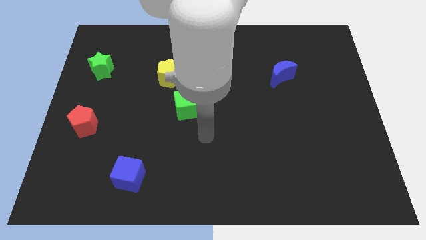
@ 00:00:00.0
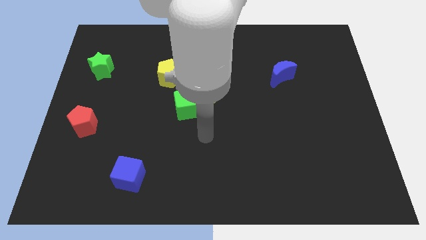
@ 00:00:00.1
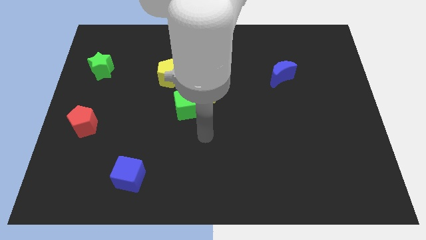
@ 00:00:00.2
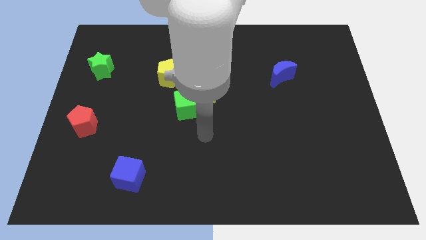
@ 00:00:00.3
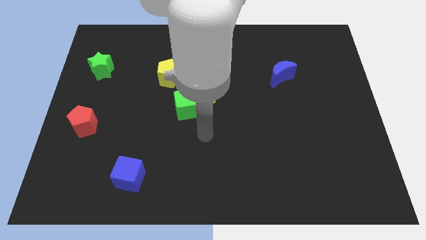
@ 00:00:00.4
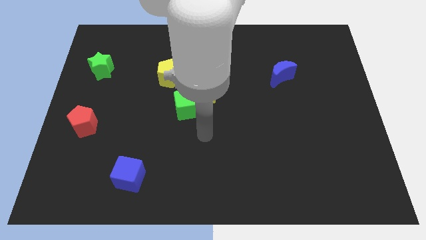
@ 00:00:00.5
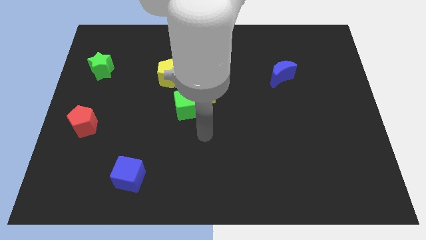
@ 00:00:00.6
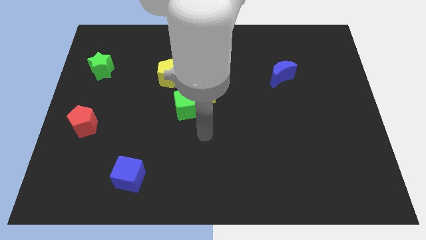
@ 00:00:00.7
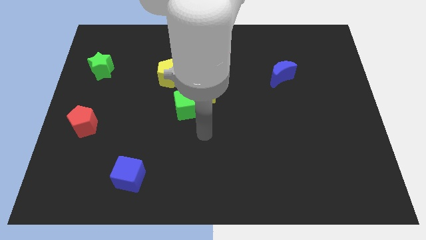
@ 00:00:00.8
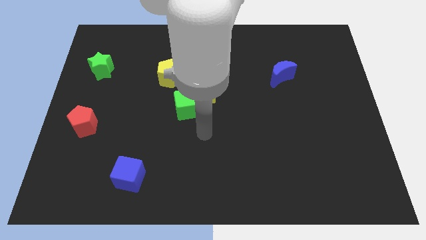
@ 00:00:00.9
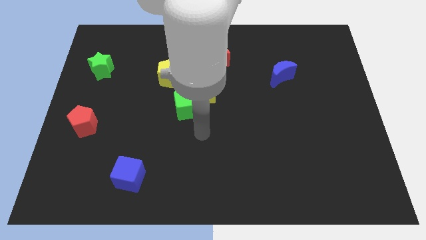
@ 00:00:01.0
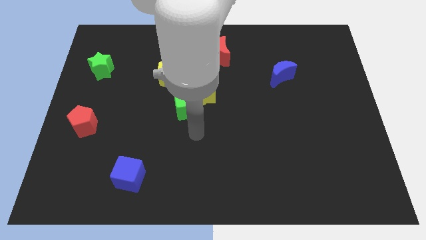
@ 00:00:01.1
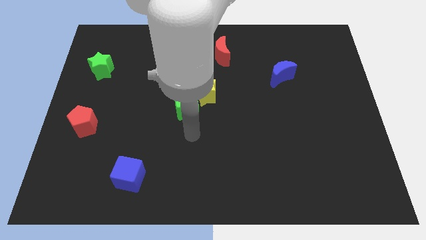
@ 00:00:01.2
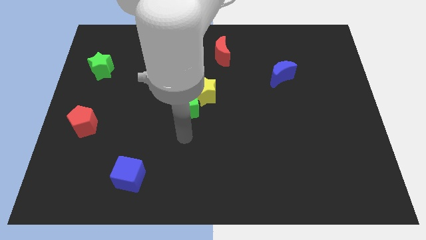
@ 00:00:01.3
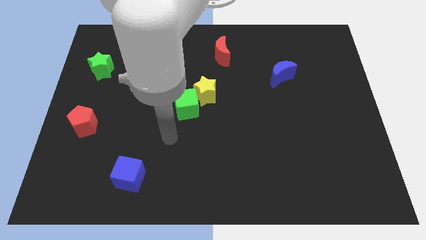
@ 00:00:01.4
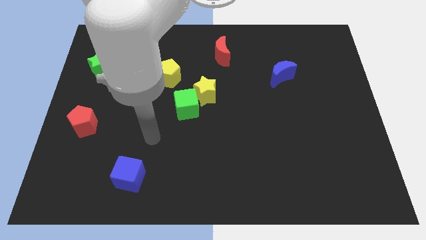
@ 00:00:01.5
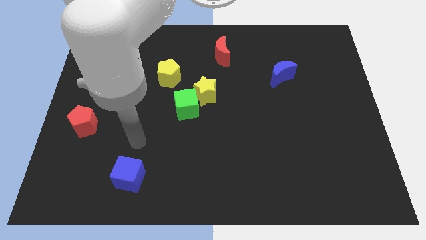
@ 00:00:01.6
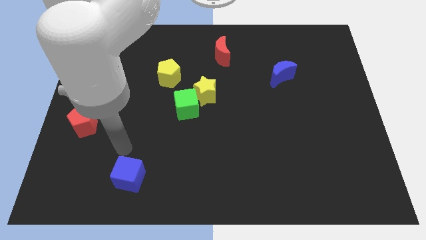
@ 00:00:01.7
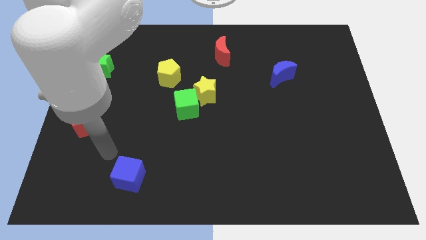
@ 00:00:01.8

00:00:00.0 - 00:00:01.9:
point your hand above the blue cube

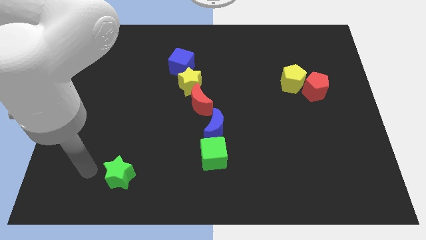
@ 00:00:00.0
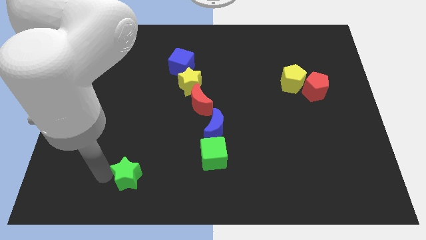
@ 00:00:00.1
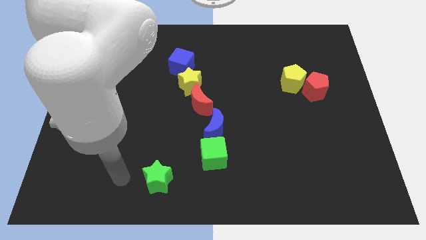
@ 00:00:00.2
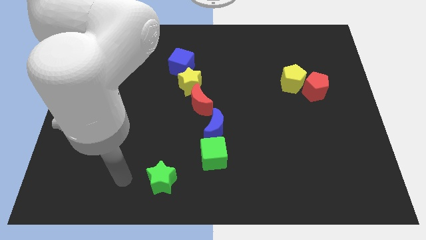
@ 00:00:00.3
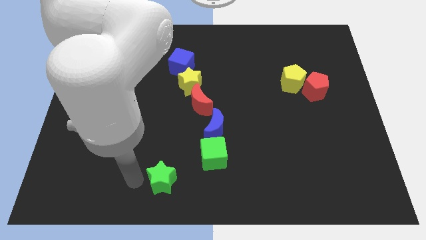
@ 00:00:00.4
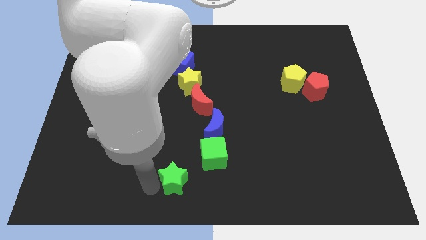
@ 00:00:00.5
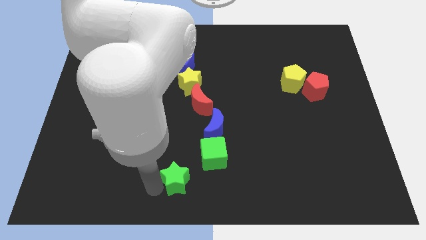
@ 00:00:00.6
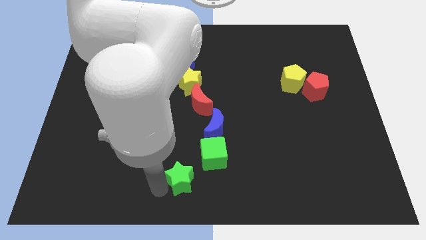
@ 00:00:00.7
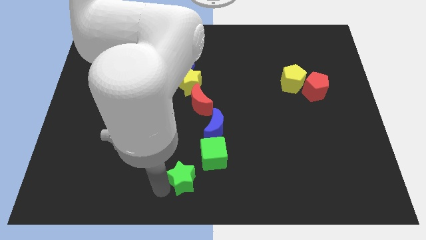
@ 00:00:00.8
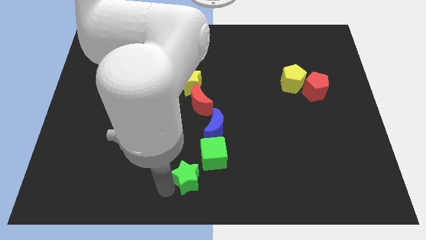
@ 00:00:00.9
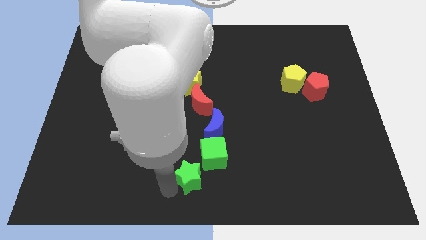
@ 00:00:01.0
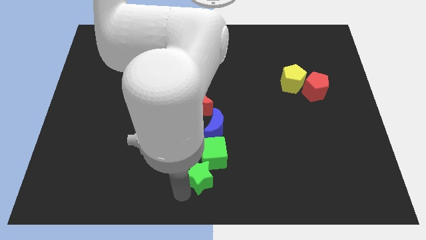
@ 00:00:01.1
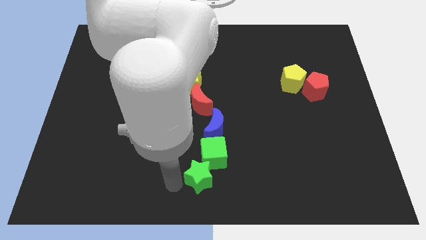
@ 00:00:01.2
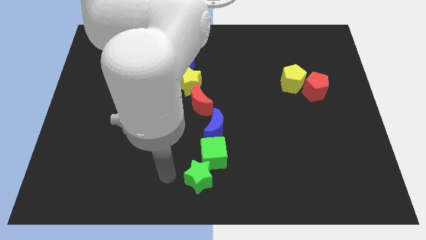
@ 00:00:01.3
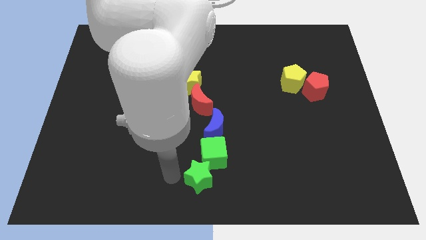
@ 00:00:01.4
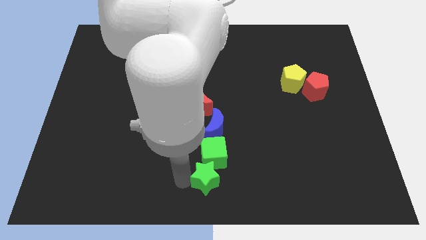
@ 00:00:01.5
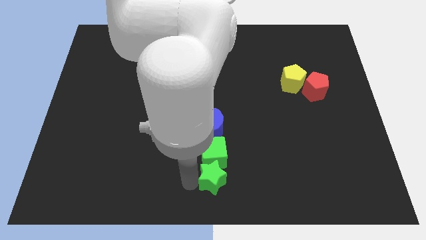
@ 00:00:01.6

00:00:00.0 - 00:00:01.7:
put the green star at the bottom of the green cube

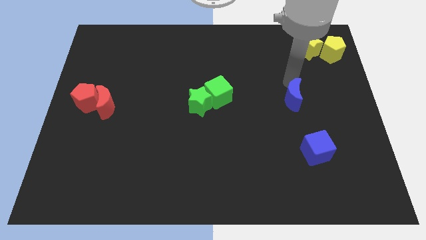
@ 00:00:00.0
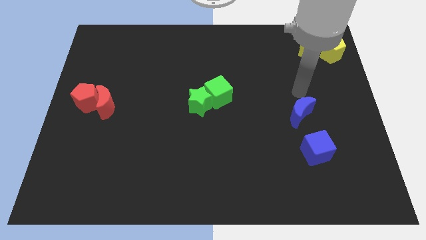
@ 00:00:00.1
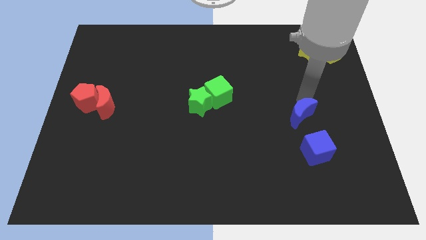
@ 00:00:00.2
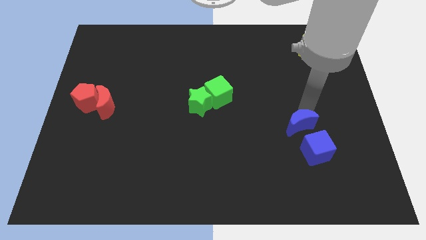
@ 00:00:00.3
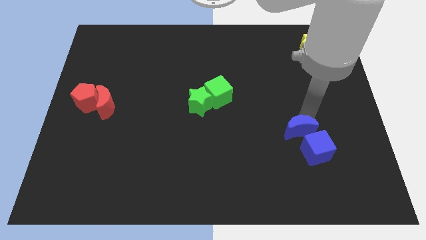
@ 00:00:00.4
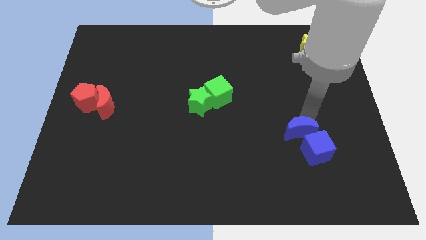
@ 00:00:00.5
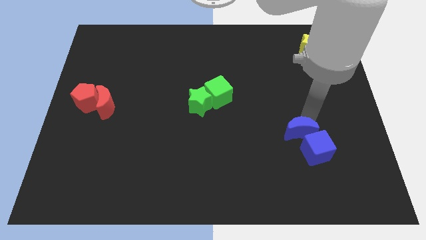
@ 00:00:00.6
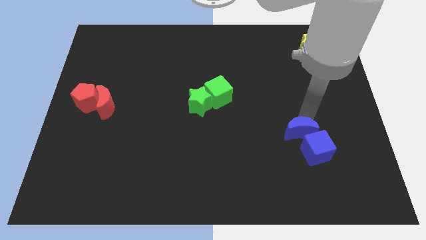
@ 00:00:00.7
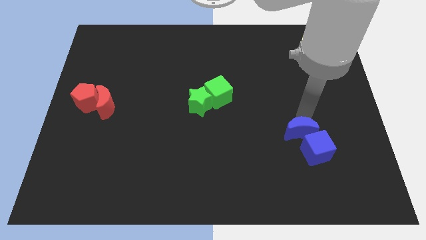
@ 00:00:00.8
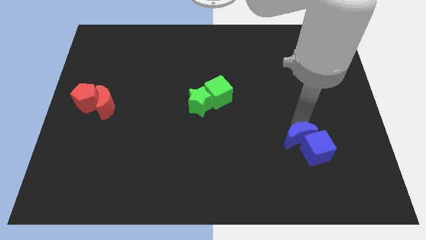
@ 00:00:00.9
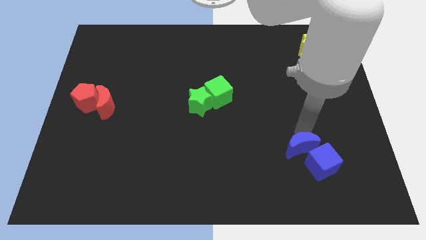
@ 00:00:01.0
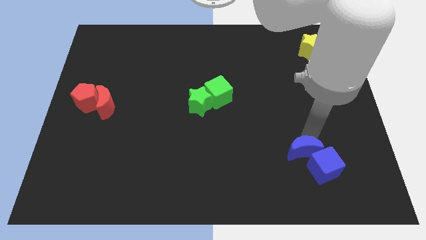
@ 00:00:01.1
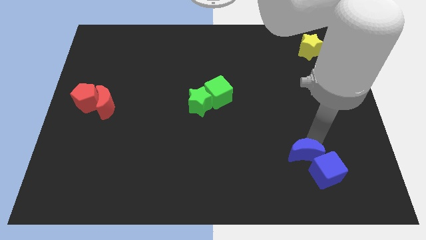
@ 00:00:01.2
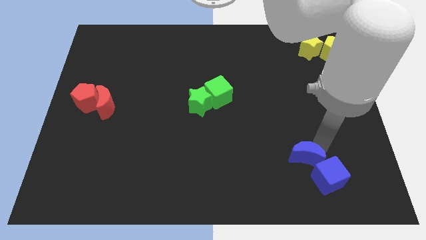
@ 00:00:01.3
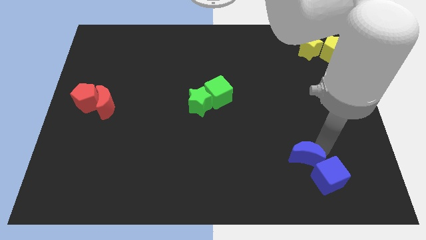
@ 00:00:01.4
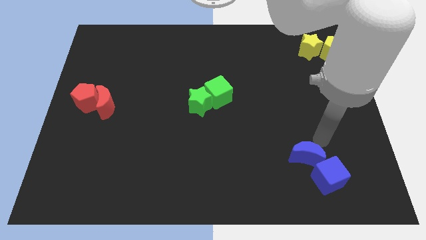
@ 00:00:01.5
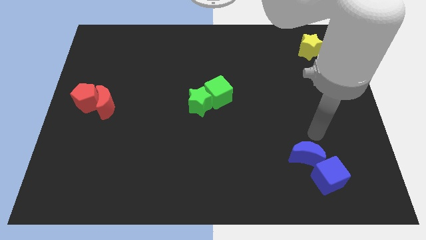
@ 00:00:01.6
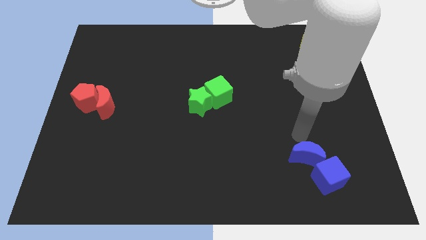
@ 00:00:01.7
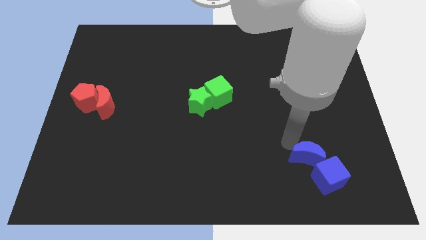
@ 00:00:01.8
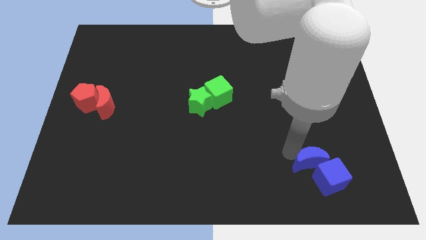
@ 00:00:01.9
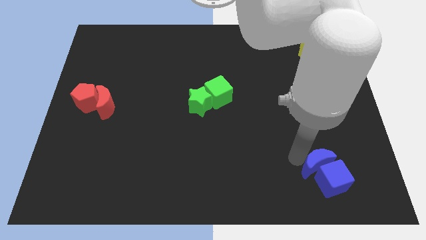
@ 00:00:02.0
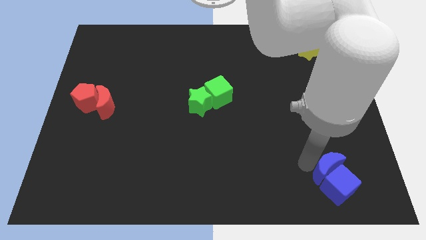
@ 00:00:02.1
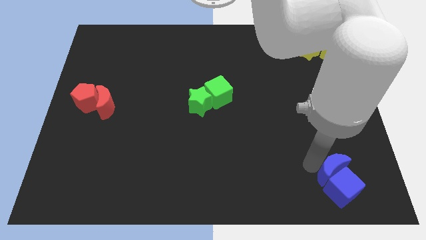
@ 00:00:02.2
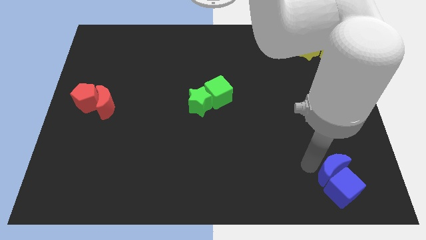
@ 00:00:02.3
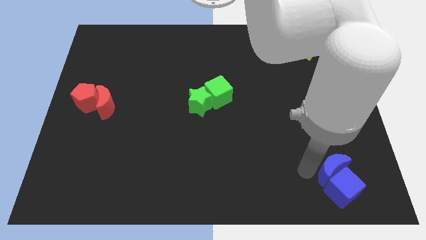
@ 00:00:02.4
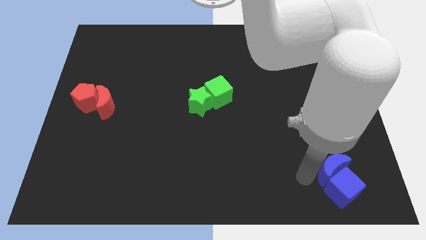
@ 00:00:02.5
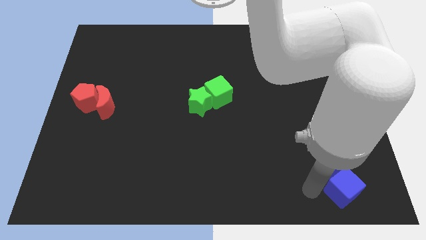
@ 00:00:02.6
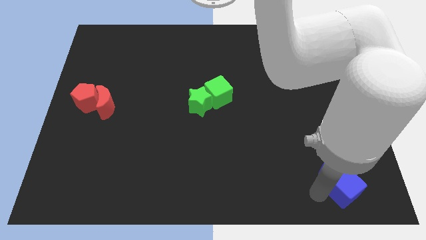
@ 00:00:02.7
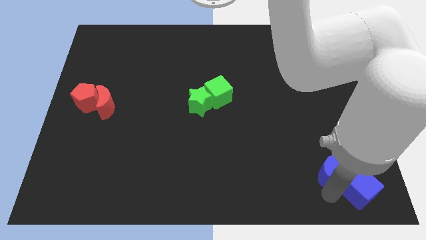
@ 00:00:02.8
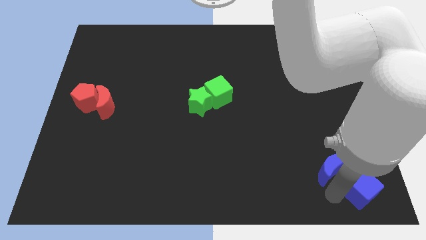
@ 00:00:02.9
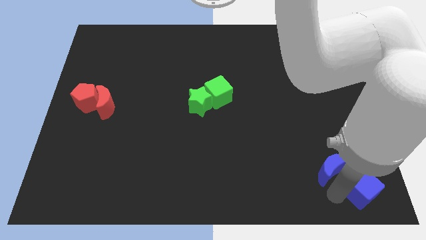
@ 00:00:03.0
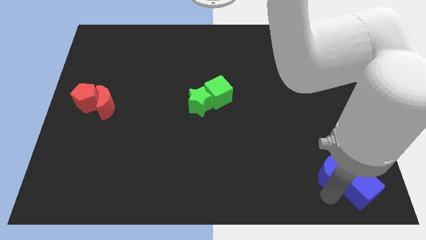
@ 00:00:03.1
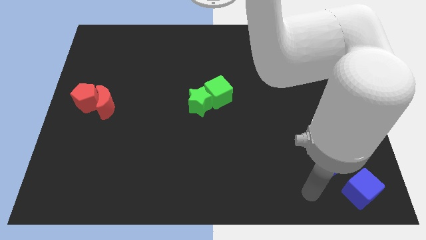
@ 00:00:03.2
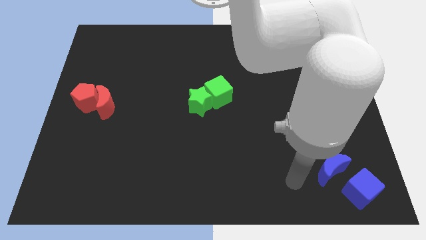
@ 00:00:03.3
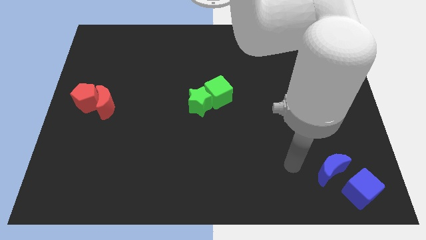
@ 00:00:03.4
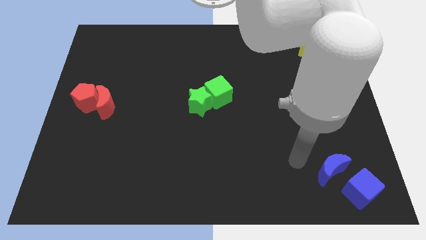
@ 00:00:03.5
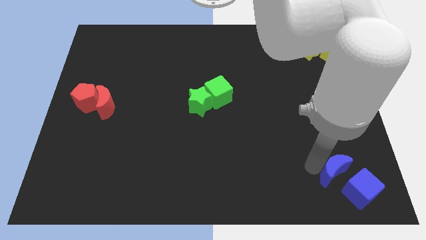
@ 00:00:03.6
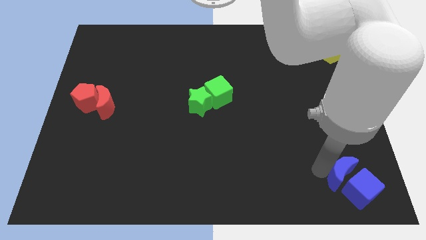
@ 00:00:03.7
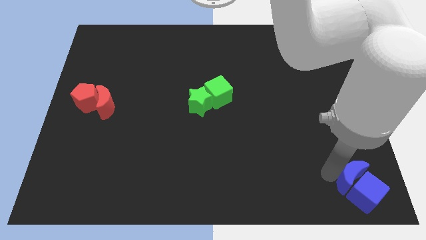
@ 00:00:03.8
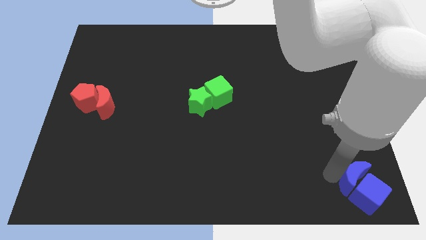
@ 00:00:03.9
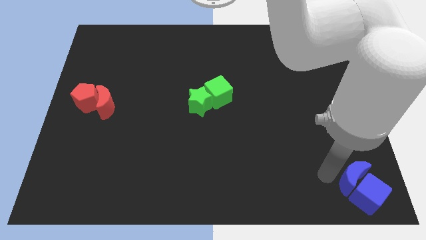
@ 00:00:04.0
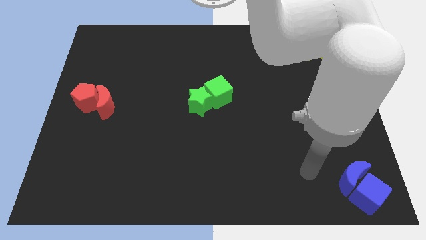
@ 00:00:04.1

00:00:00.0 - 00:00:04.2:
push blue moon with blue cube towards bottom right side of the board

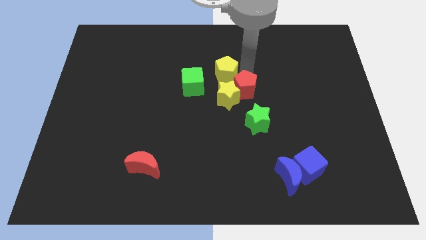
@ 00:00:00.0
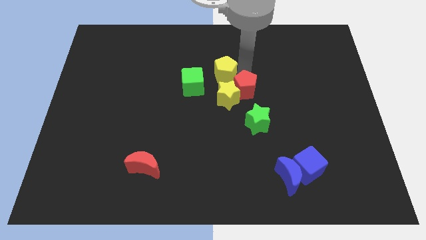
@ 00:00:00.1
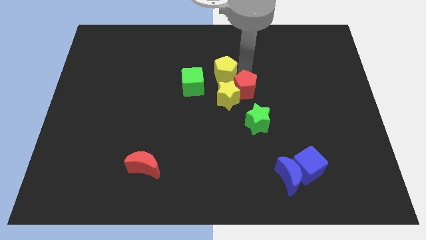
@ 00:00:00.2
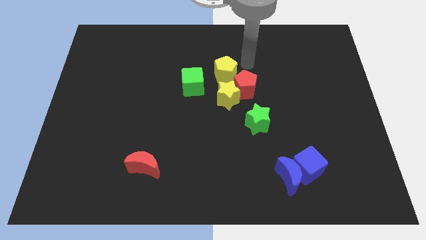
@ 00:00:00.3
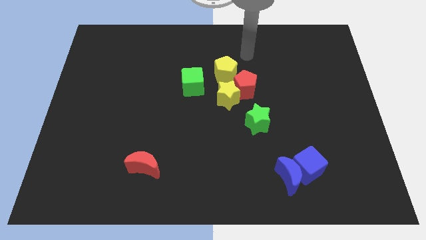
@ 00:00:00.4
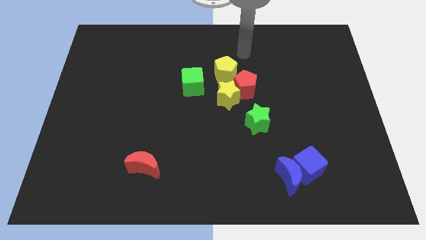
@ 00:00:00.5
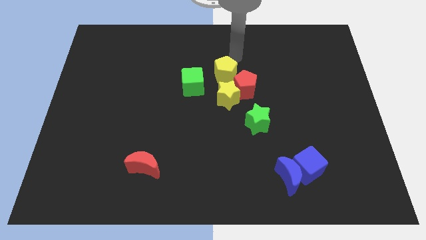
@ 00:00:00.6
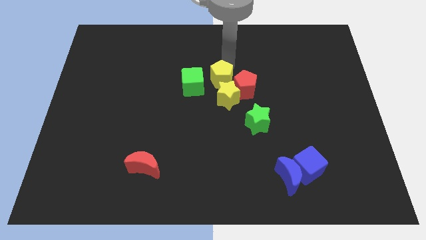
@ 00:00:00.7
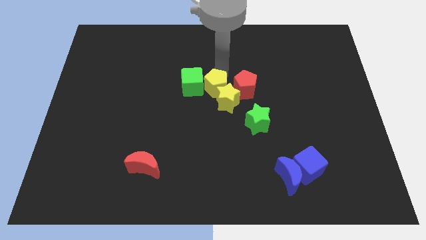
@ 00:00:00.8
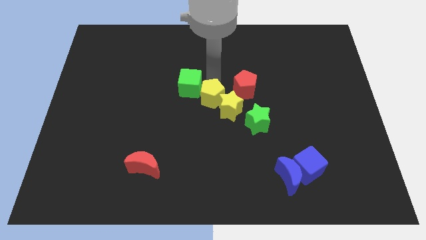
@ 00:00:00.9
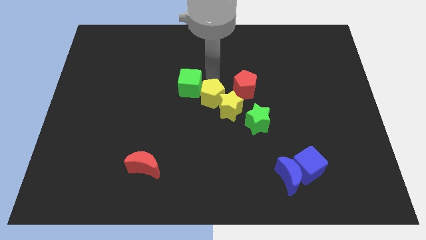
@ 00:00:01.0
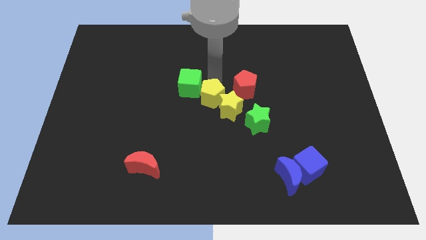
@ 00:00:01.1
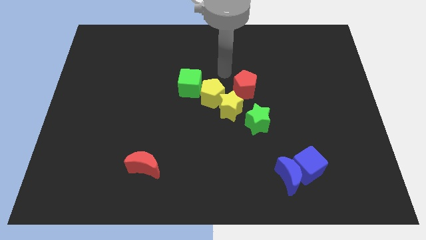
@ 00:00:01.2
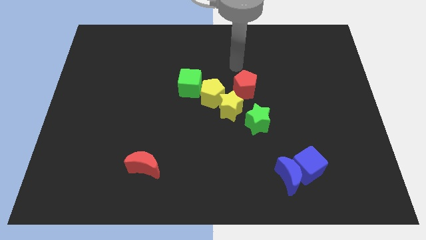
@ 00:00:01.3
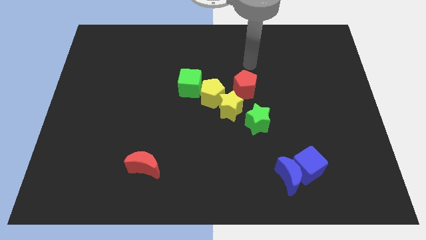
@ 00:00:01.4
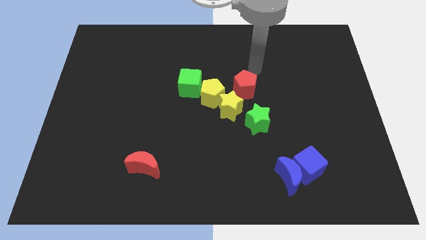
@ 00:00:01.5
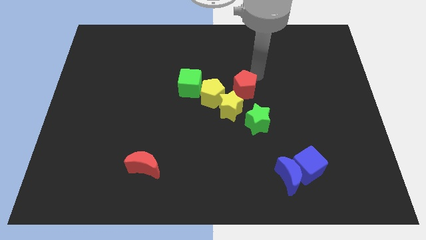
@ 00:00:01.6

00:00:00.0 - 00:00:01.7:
slide the yellow pentagon to bottom right of green cube
